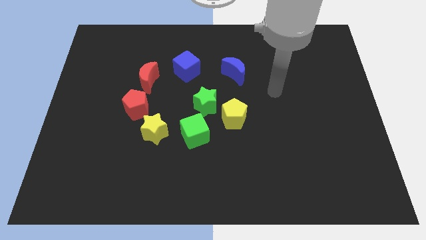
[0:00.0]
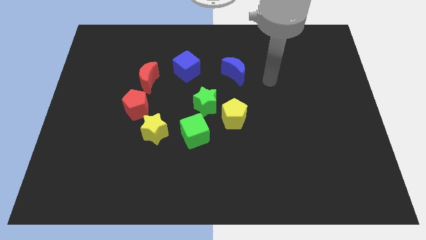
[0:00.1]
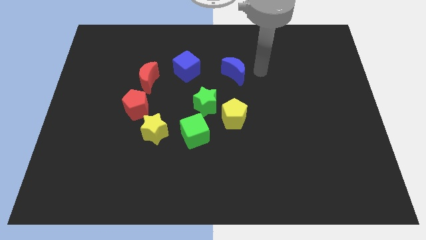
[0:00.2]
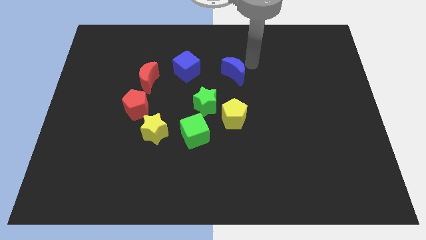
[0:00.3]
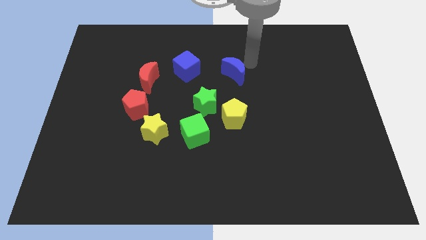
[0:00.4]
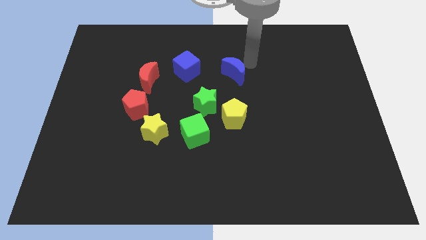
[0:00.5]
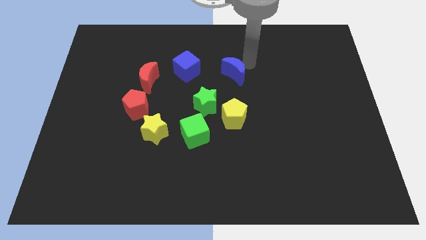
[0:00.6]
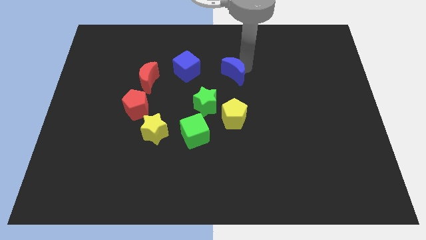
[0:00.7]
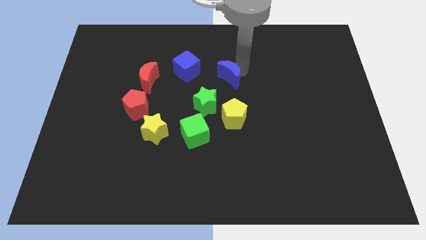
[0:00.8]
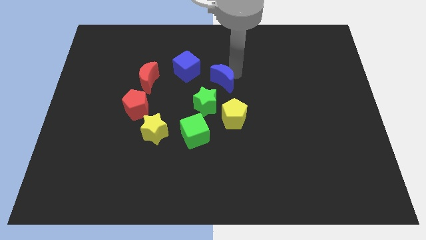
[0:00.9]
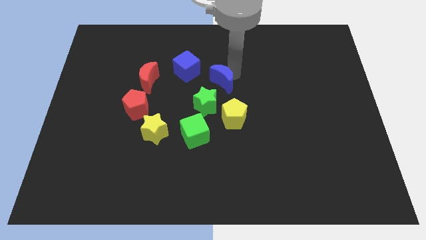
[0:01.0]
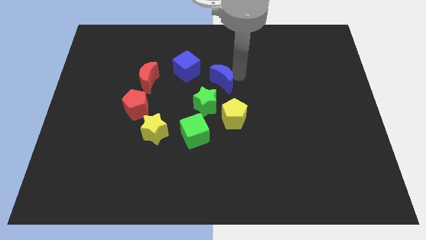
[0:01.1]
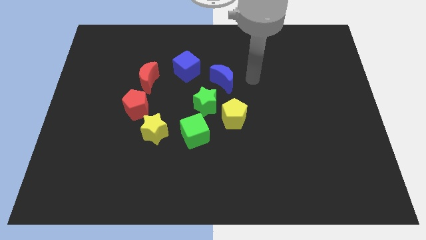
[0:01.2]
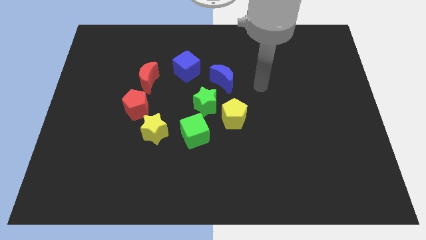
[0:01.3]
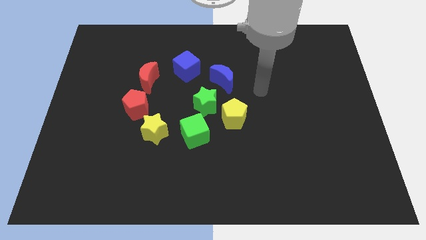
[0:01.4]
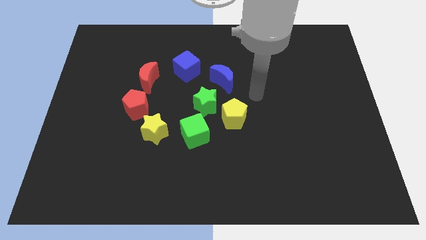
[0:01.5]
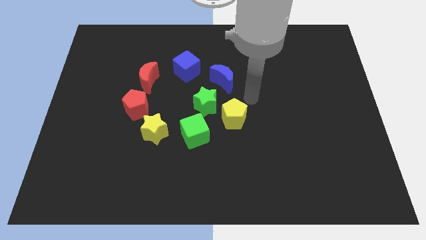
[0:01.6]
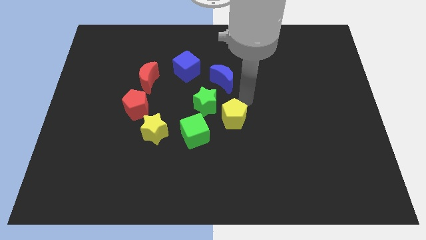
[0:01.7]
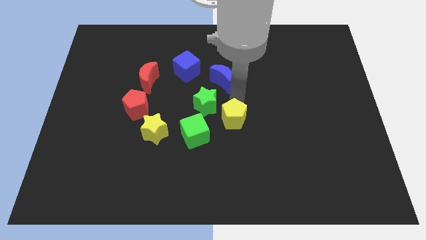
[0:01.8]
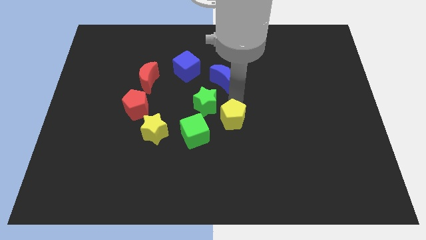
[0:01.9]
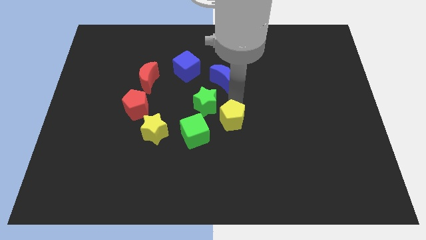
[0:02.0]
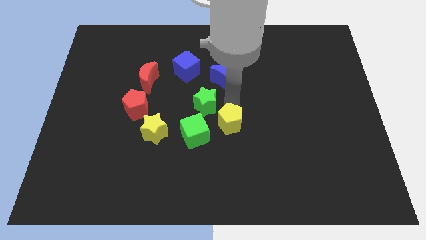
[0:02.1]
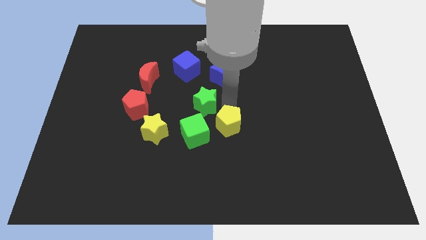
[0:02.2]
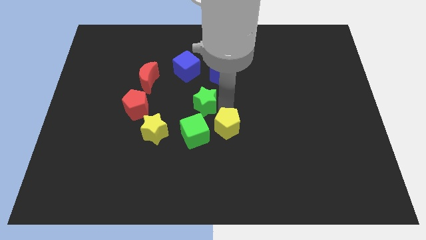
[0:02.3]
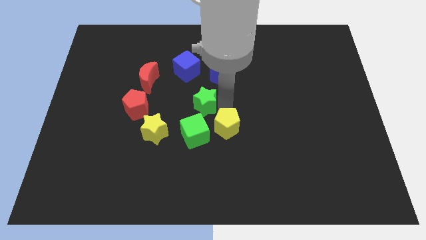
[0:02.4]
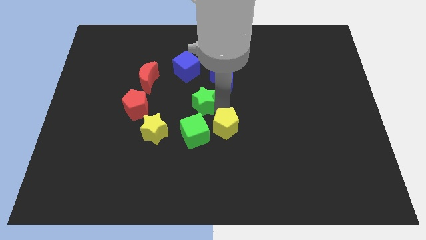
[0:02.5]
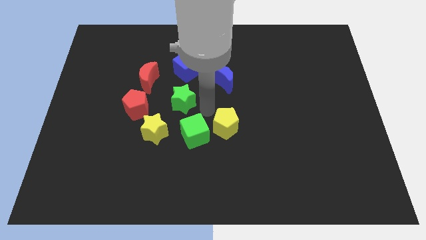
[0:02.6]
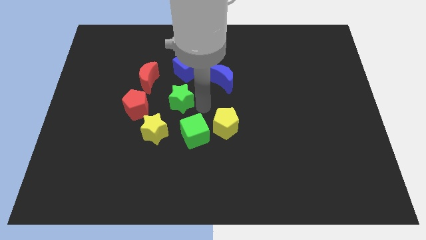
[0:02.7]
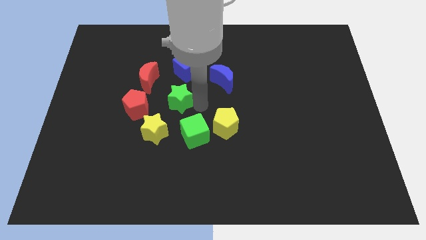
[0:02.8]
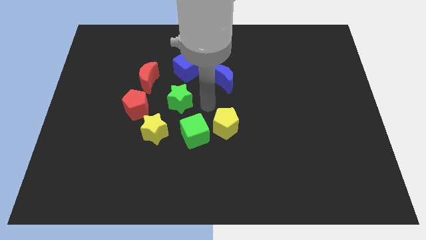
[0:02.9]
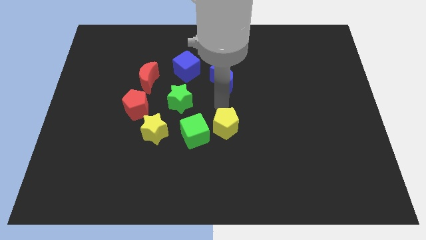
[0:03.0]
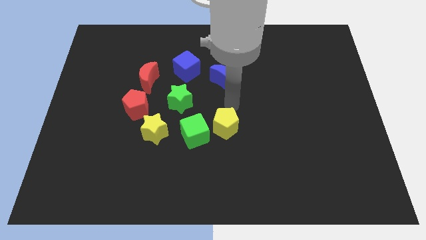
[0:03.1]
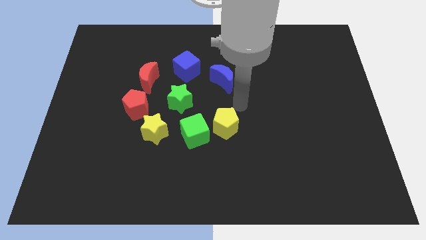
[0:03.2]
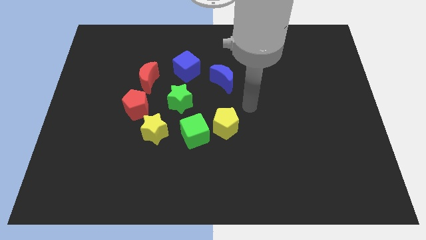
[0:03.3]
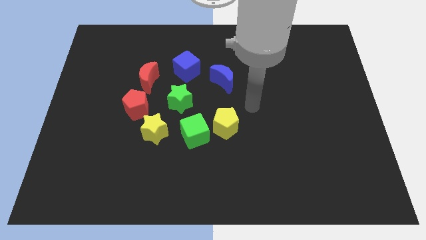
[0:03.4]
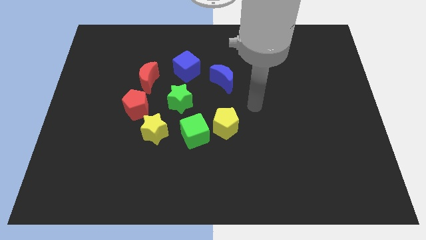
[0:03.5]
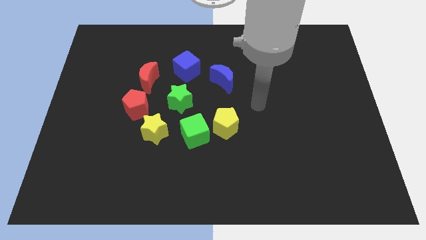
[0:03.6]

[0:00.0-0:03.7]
move the arm in between the green star and yellow pentagon

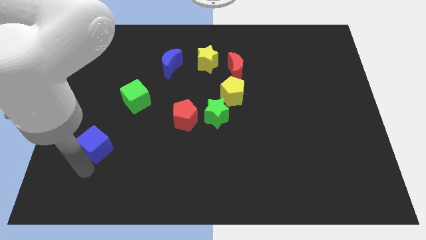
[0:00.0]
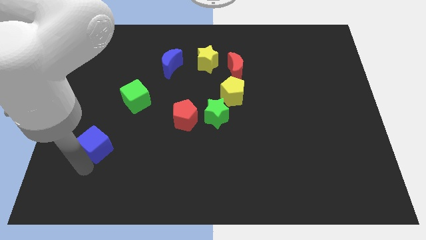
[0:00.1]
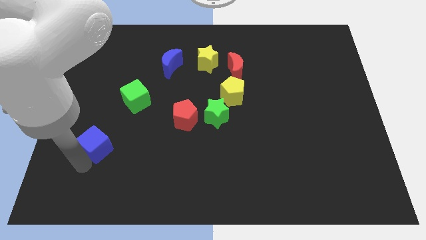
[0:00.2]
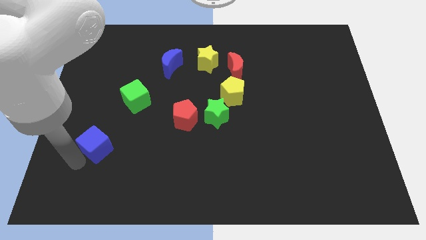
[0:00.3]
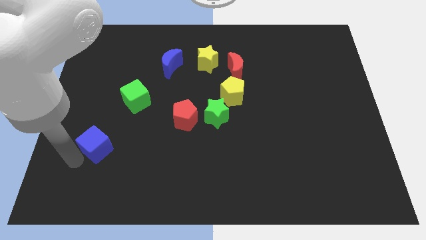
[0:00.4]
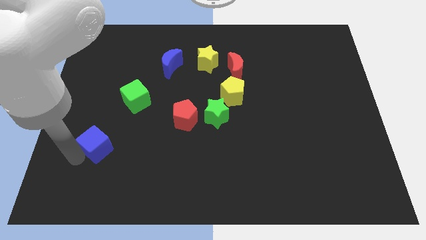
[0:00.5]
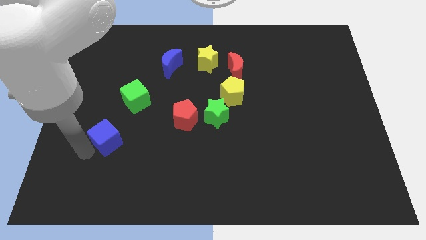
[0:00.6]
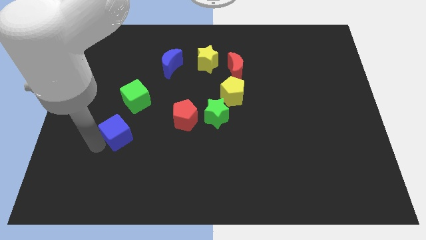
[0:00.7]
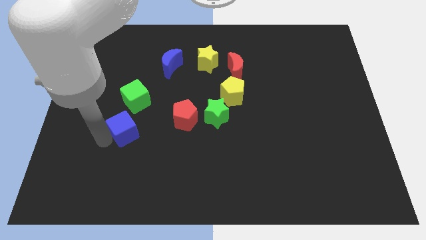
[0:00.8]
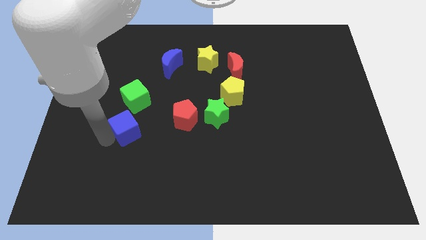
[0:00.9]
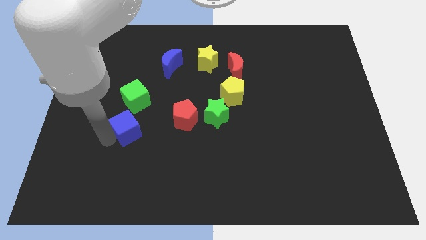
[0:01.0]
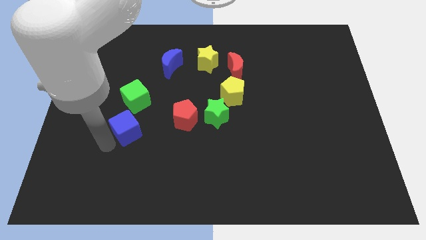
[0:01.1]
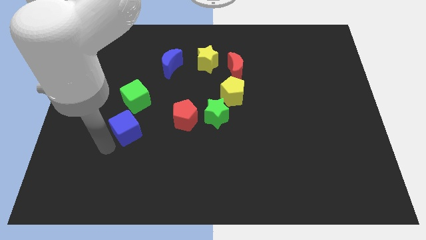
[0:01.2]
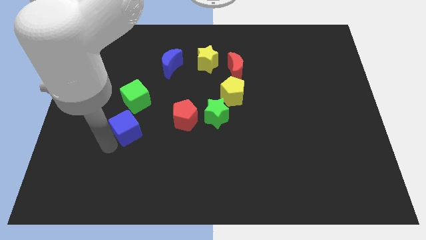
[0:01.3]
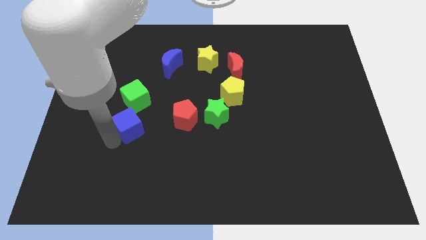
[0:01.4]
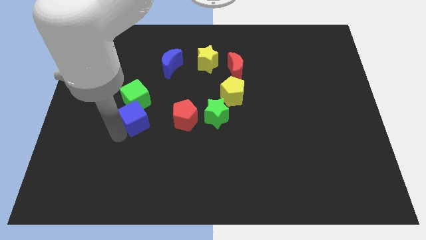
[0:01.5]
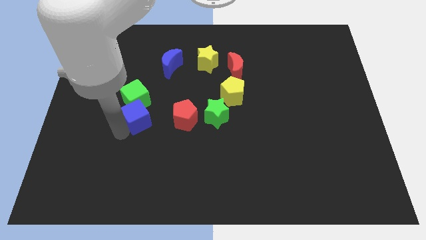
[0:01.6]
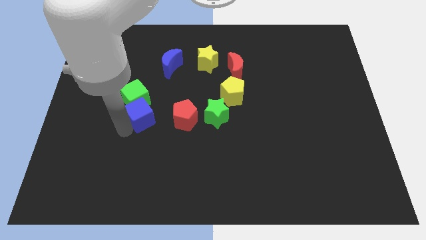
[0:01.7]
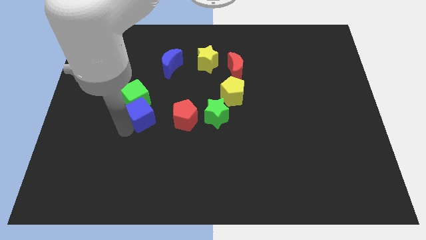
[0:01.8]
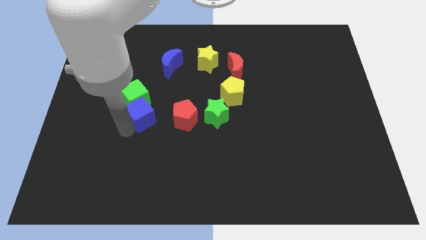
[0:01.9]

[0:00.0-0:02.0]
move the blue cube into the green cube

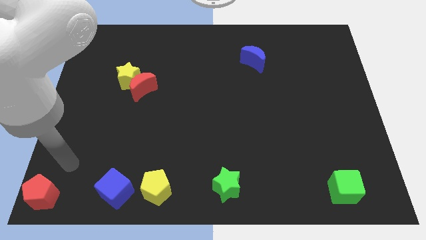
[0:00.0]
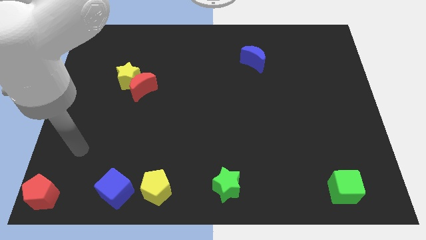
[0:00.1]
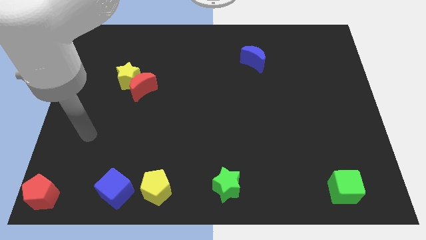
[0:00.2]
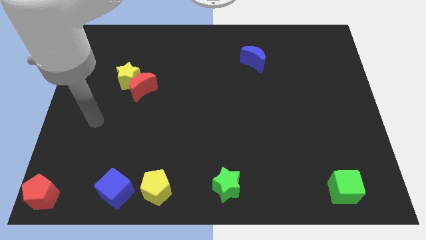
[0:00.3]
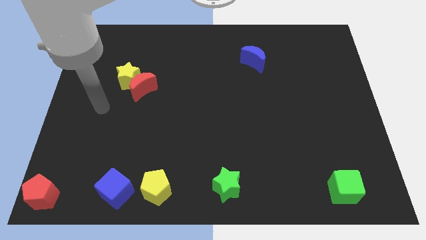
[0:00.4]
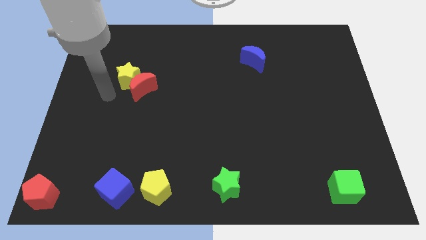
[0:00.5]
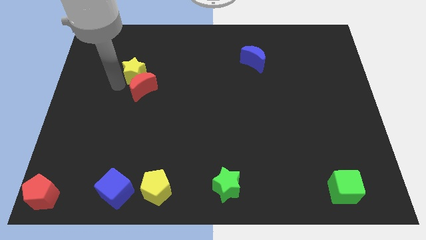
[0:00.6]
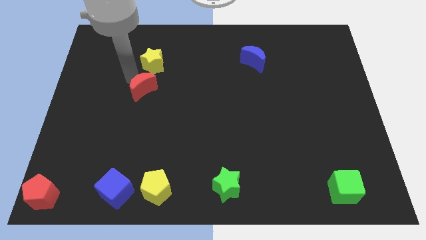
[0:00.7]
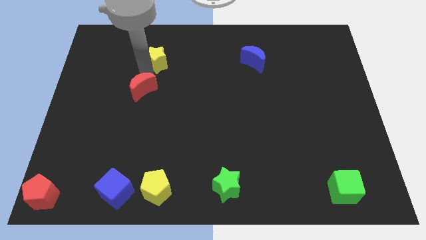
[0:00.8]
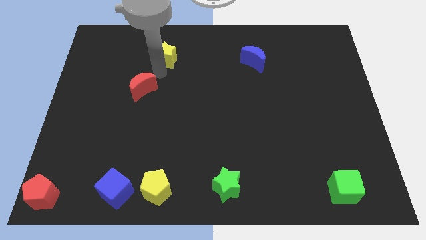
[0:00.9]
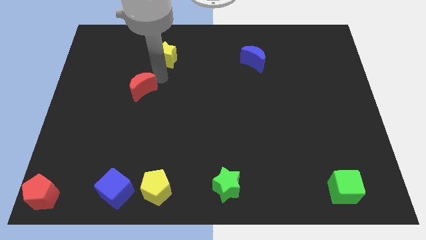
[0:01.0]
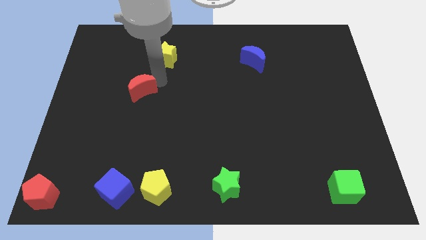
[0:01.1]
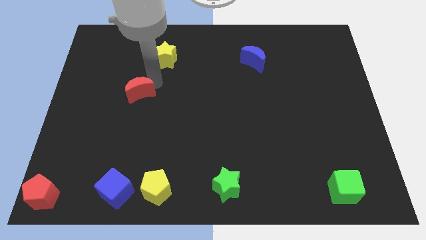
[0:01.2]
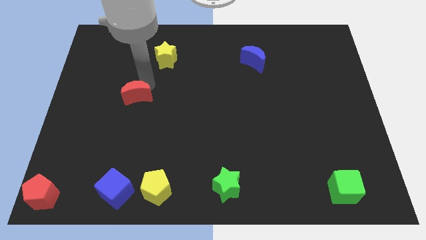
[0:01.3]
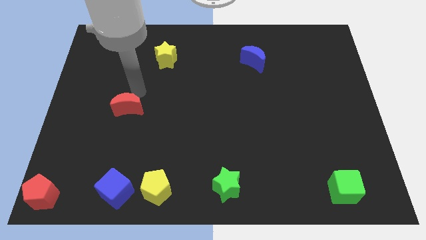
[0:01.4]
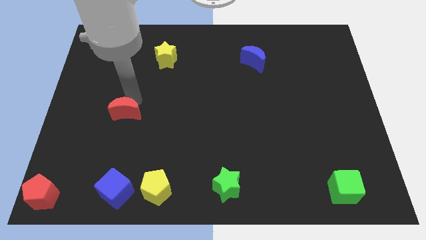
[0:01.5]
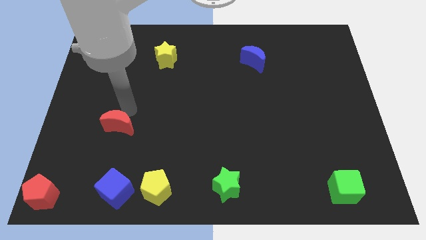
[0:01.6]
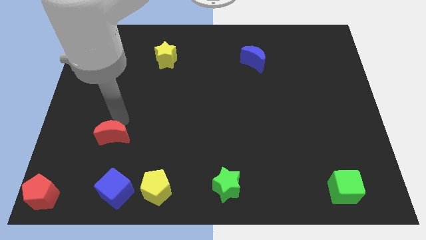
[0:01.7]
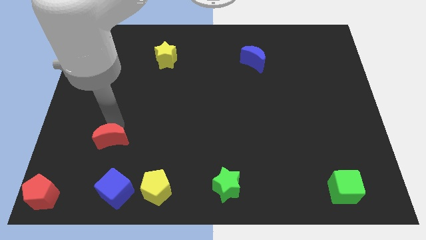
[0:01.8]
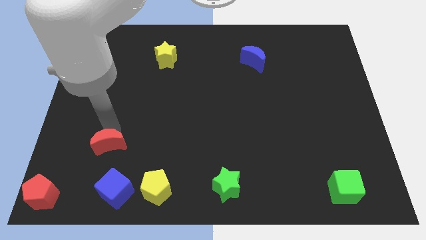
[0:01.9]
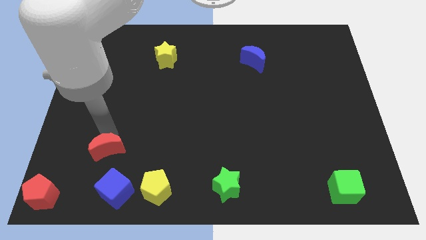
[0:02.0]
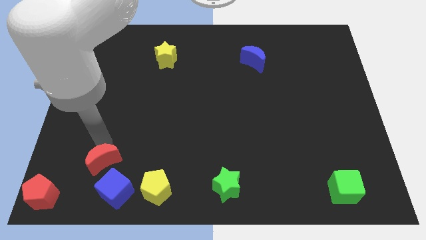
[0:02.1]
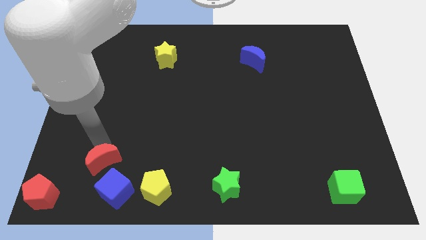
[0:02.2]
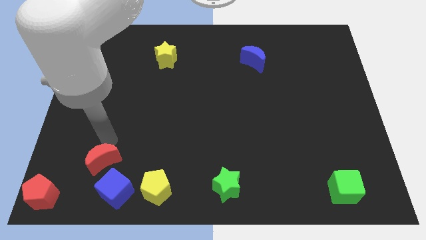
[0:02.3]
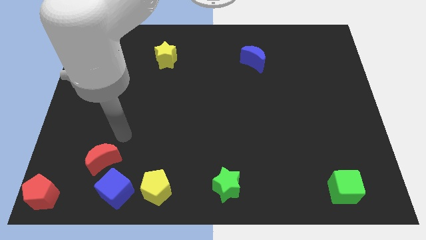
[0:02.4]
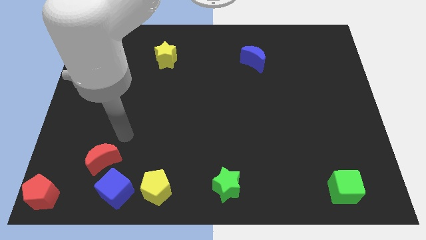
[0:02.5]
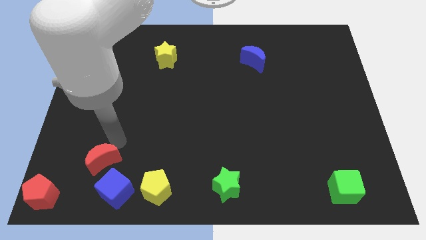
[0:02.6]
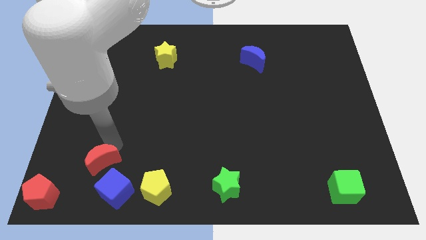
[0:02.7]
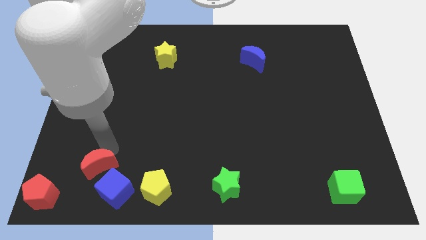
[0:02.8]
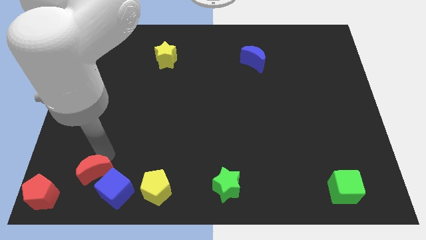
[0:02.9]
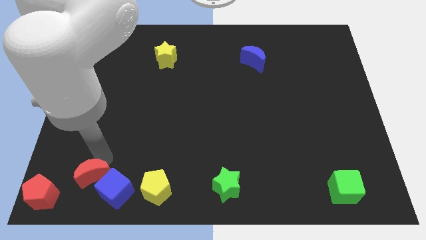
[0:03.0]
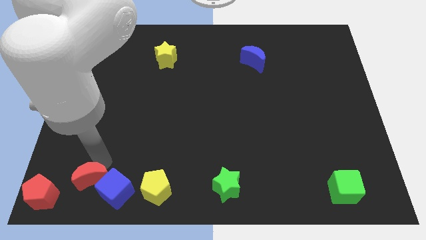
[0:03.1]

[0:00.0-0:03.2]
separate yellow star and the red crescent
